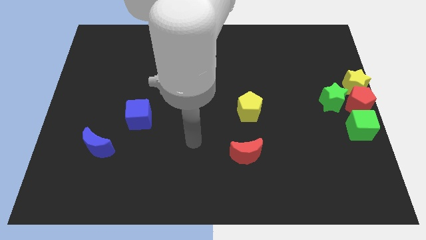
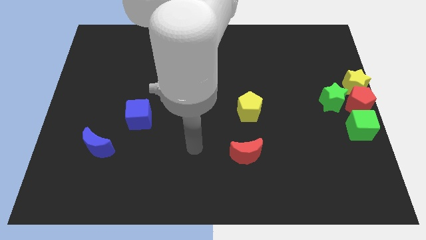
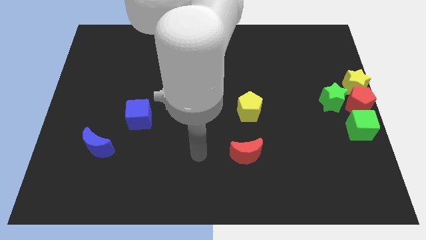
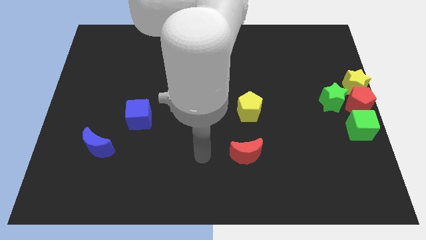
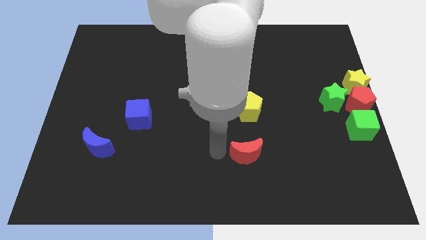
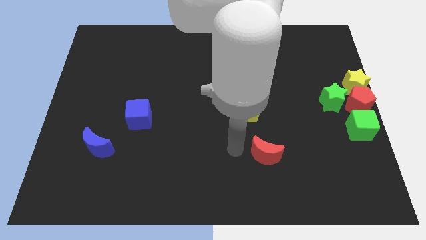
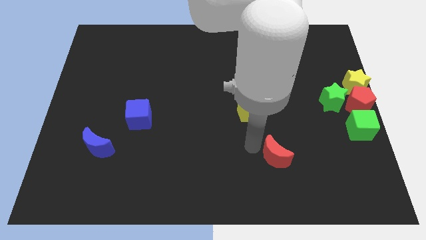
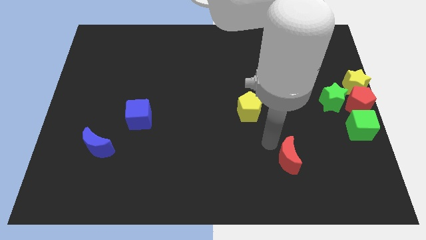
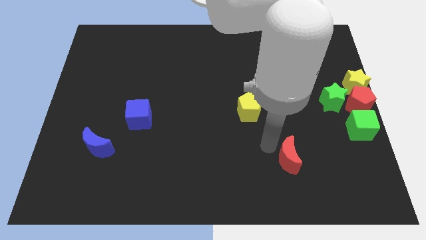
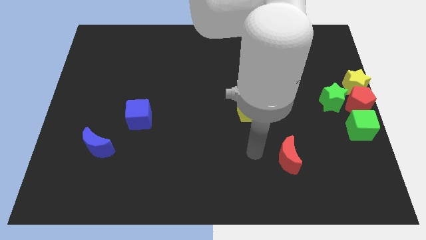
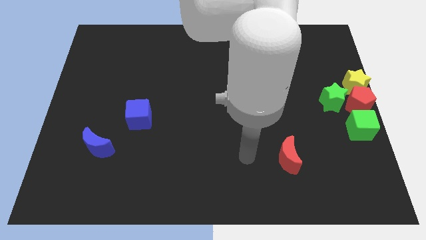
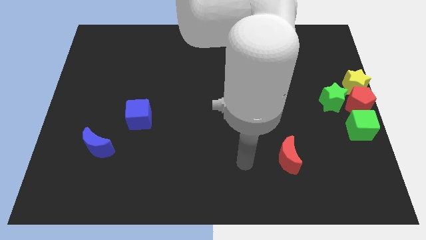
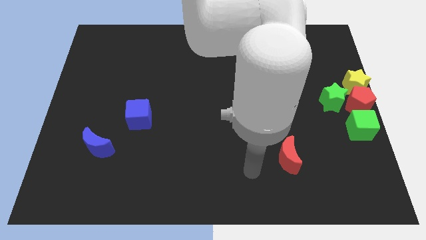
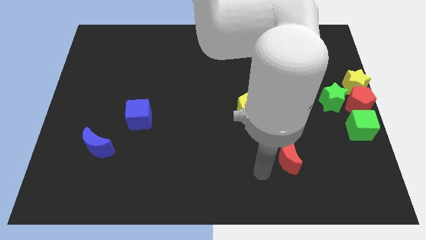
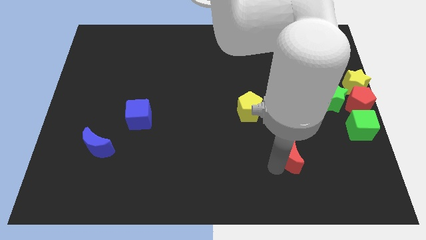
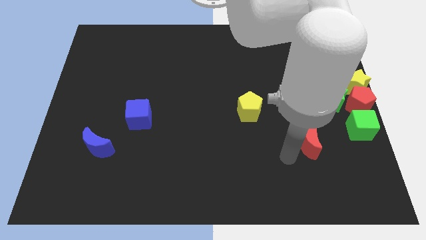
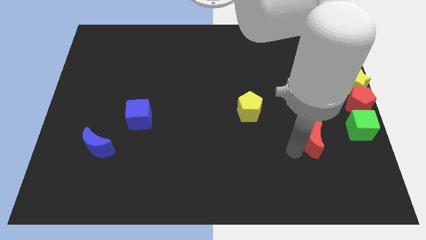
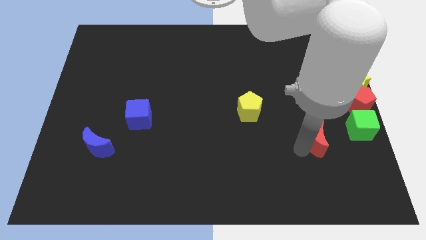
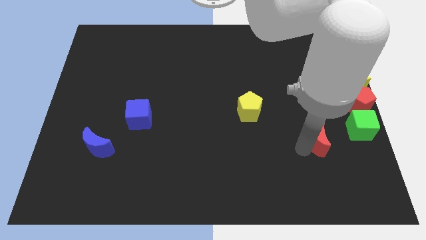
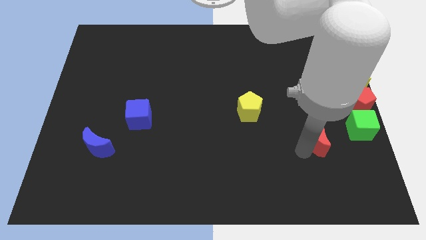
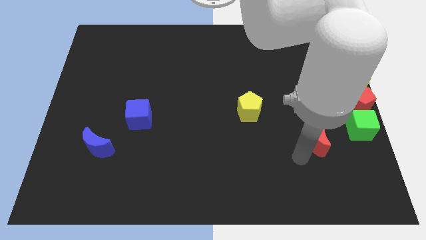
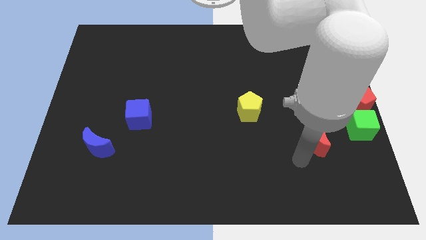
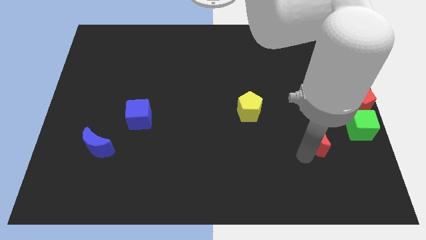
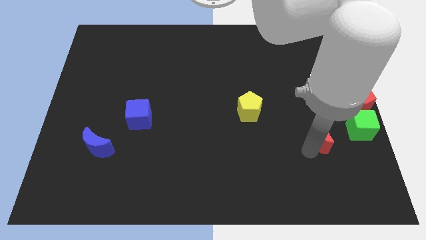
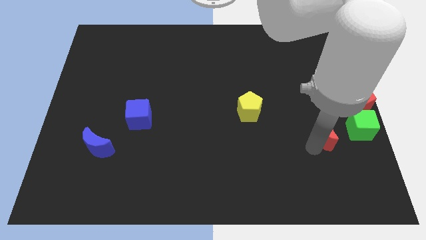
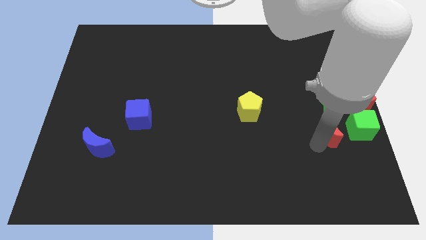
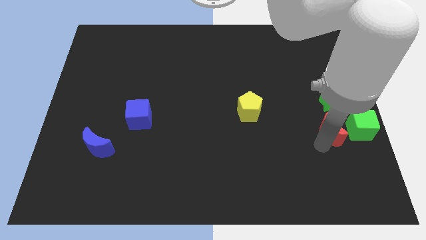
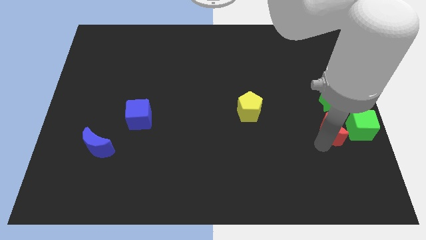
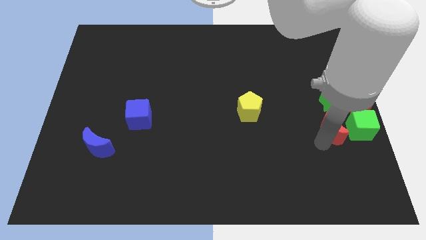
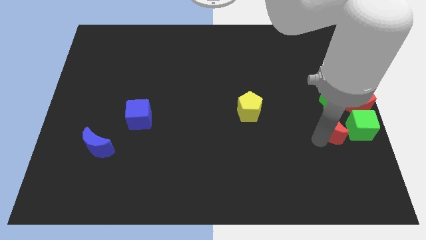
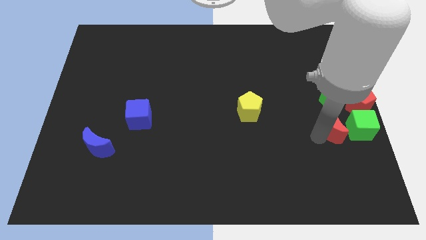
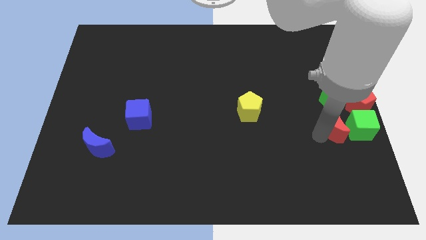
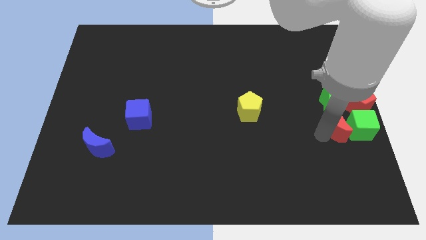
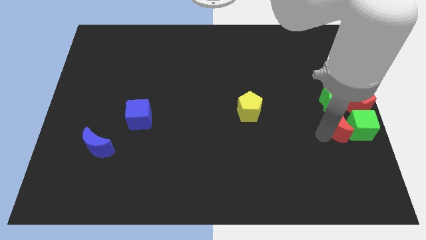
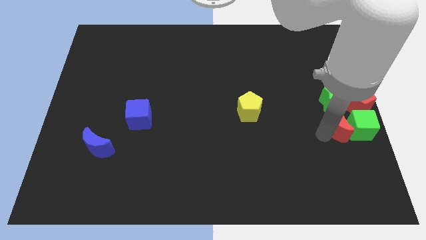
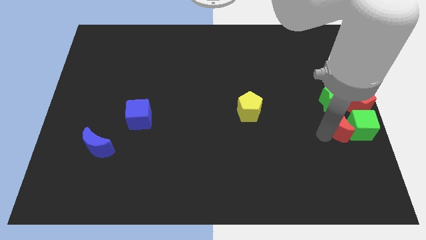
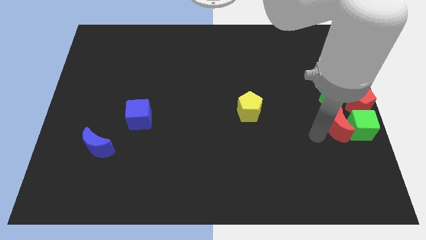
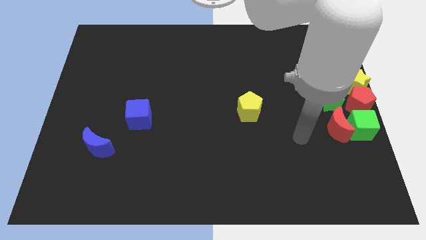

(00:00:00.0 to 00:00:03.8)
place the red crescent to the left side of the green cube

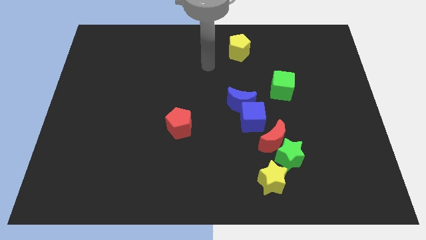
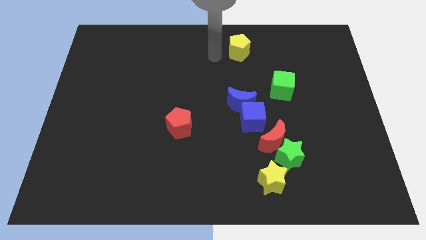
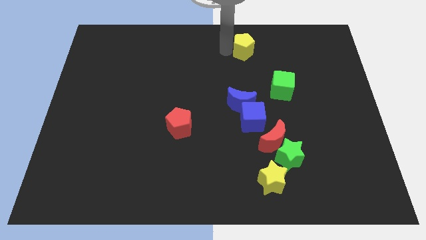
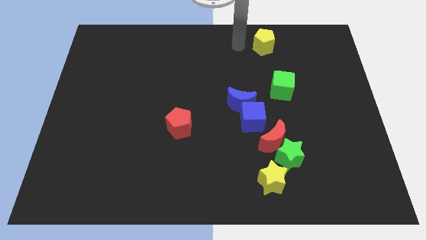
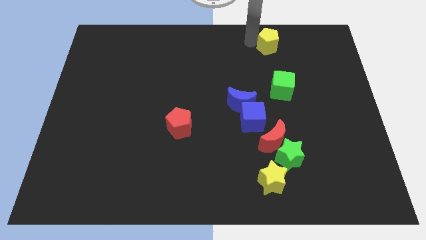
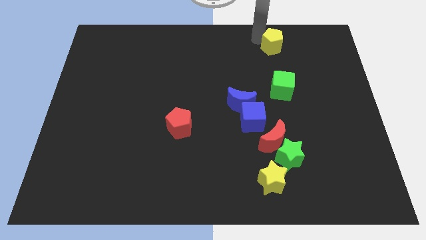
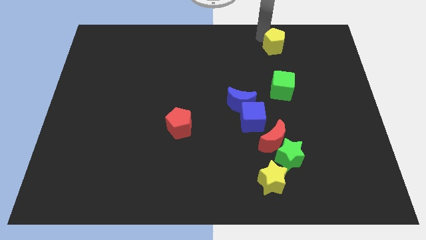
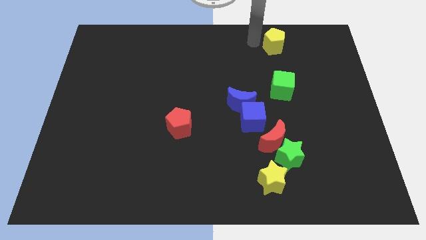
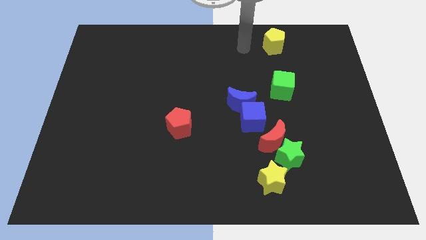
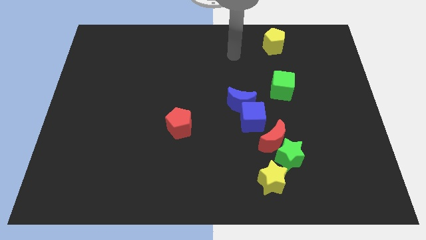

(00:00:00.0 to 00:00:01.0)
move the yellow pentagon above the green cube

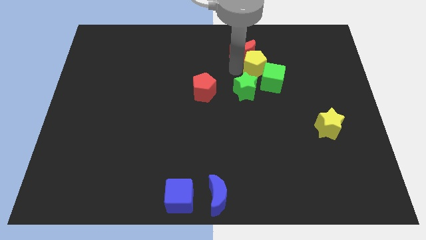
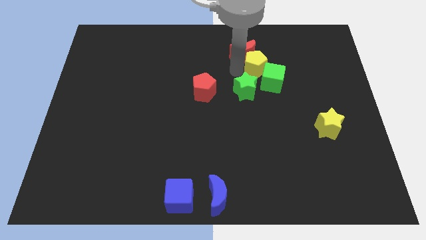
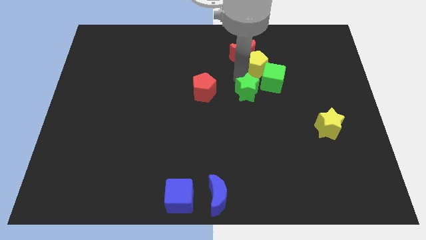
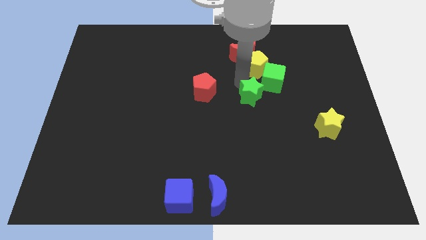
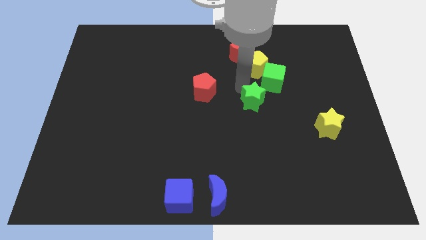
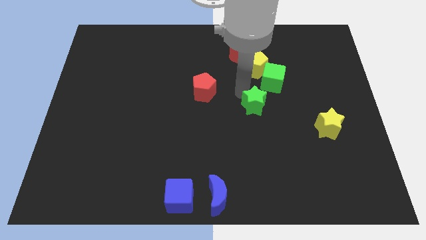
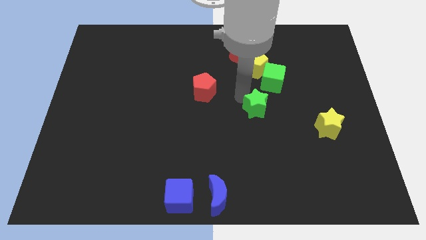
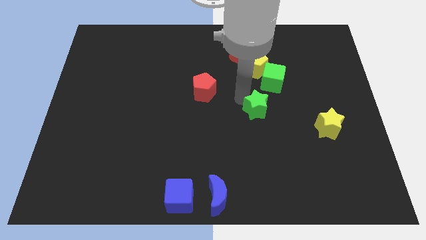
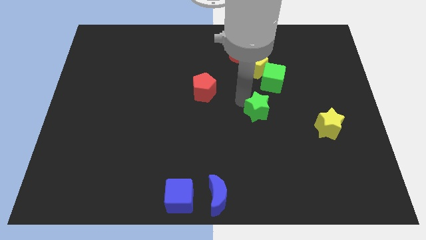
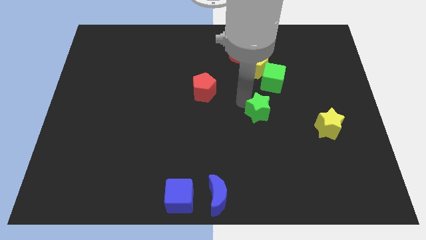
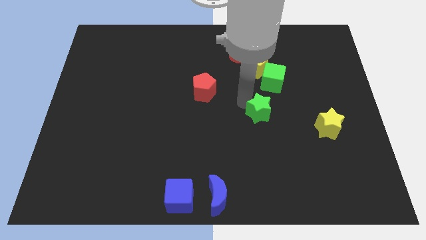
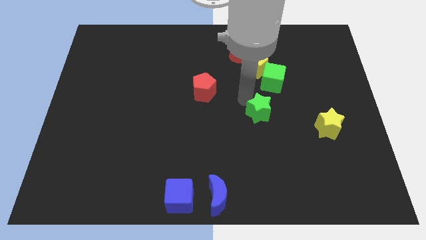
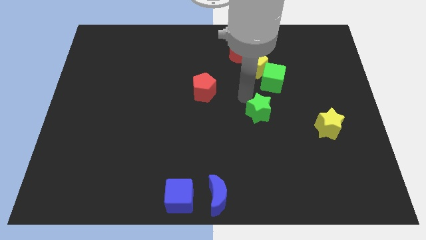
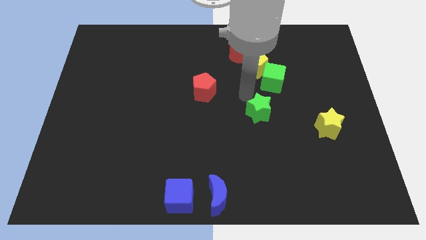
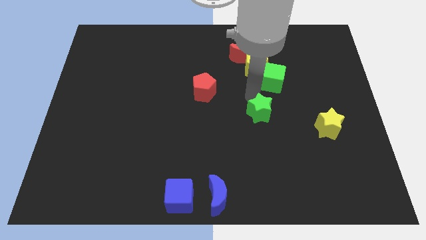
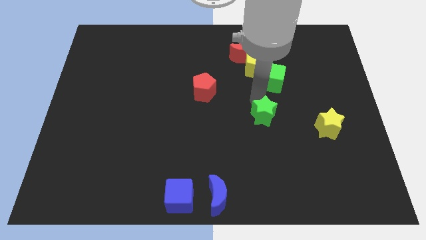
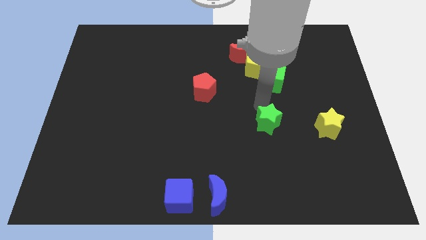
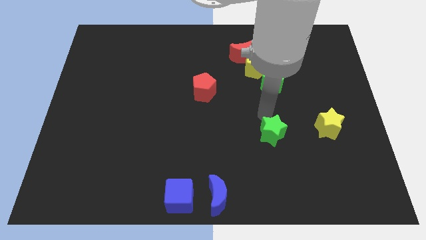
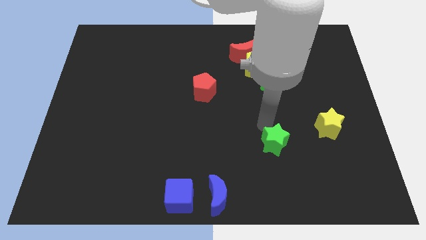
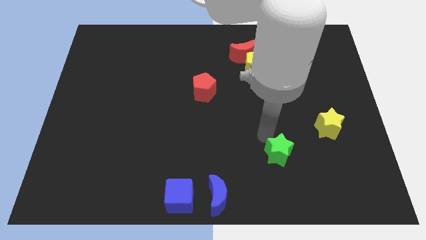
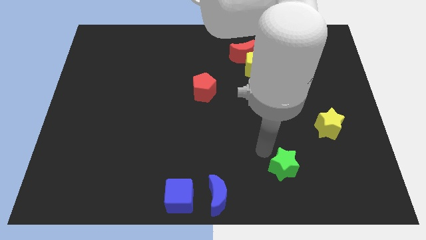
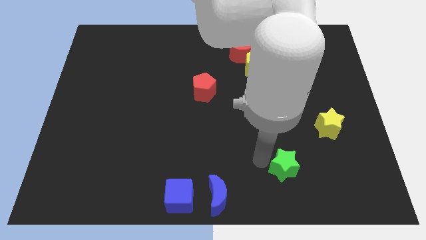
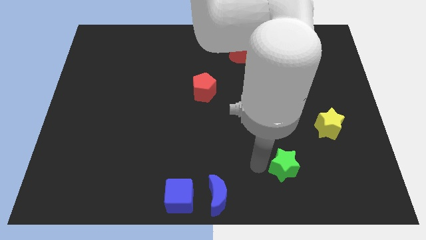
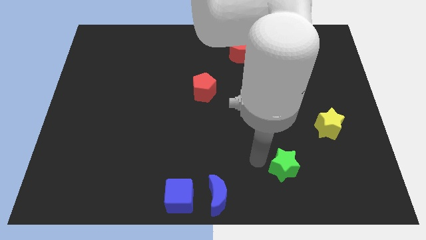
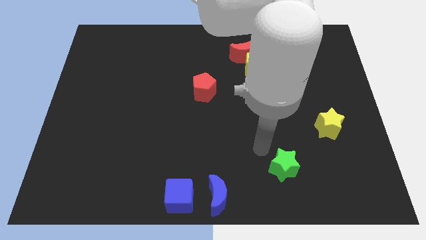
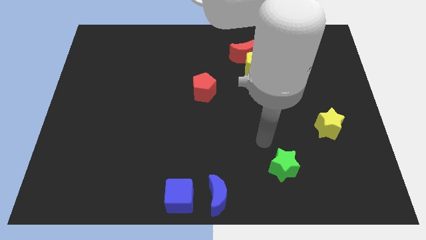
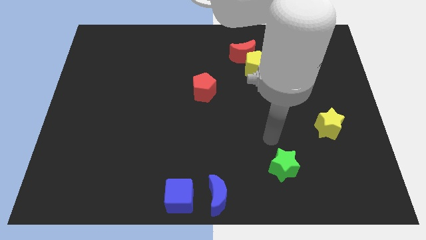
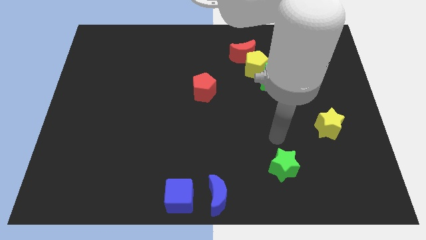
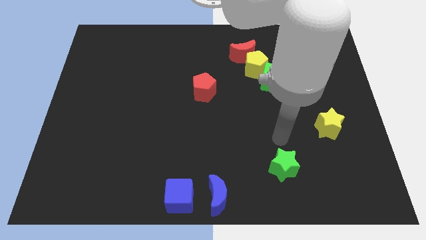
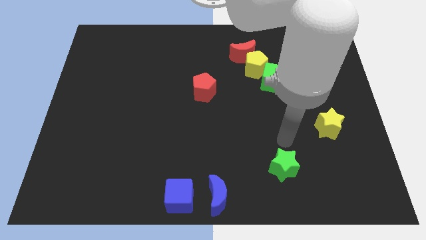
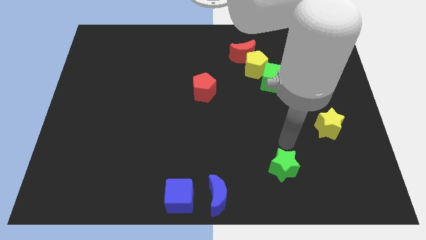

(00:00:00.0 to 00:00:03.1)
place the green star diagonally to the yellow star in the left

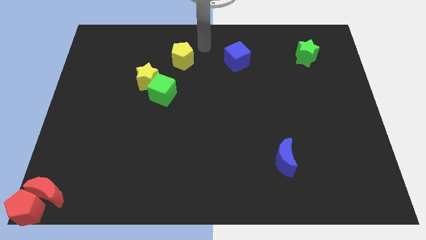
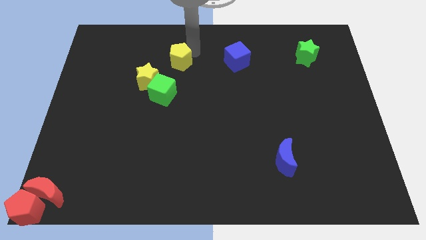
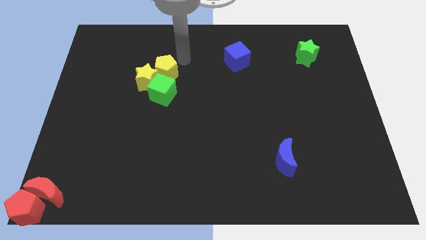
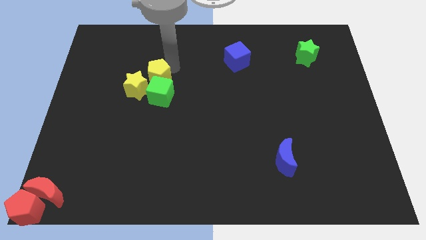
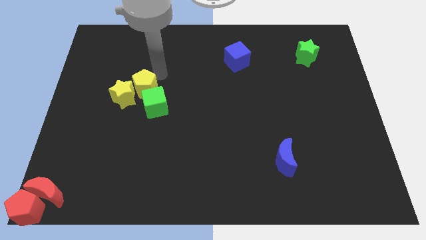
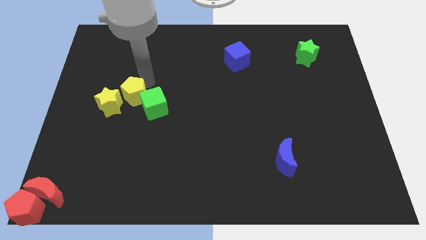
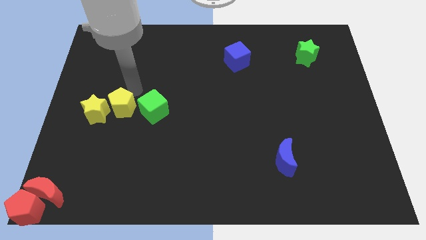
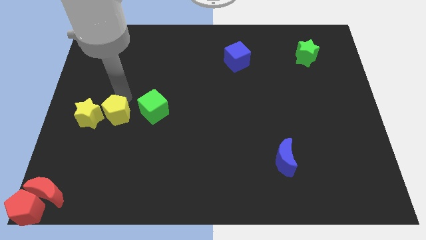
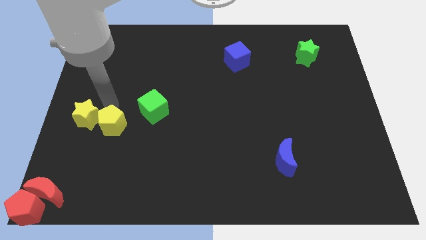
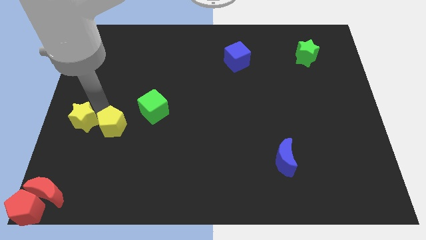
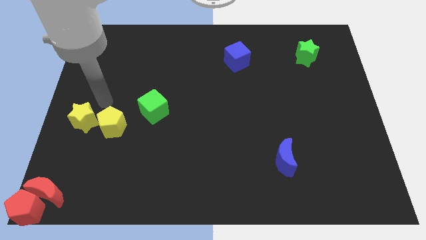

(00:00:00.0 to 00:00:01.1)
push the yellow blocks and green cube towards the red blocks
